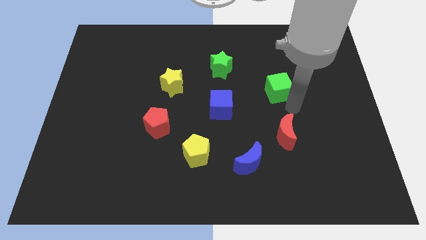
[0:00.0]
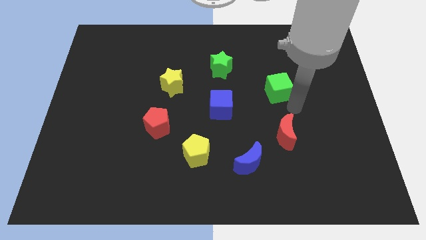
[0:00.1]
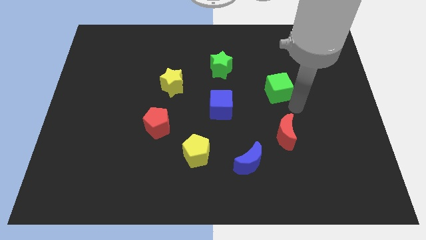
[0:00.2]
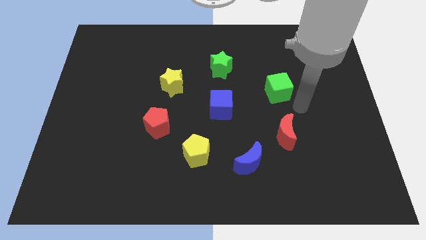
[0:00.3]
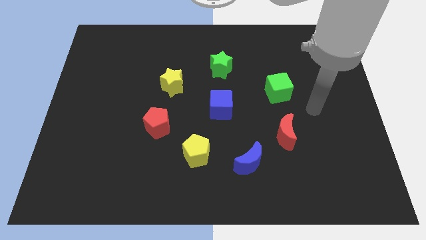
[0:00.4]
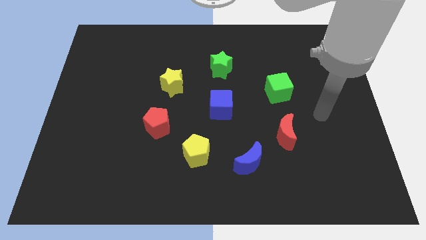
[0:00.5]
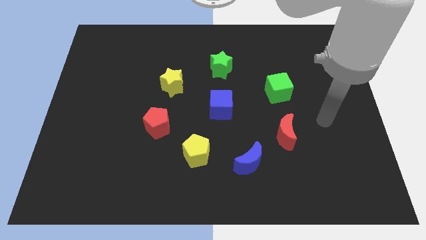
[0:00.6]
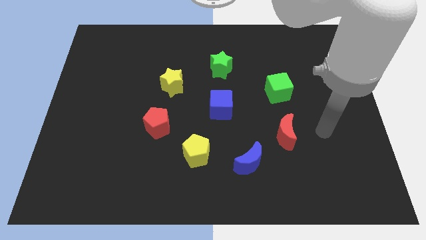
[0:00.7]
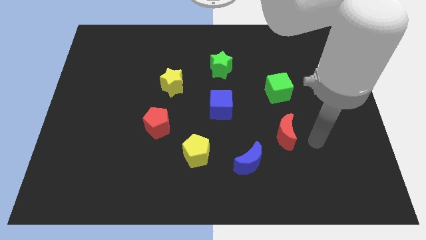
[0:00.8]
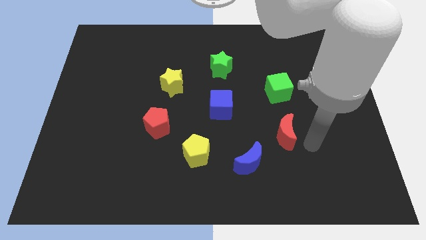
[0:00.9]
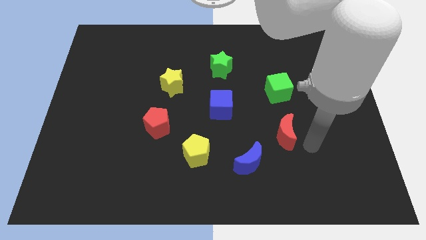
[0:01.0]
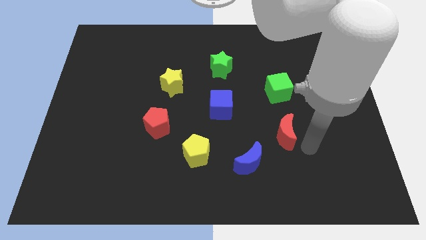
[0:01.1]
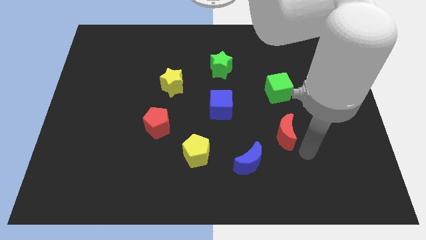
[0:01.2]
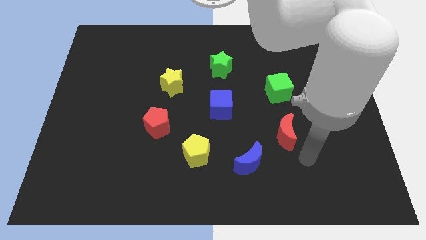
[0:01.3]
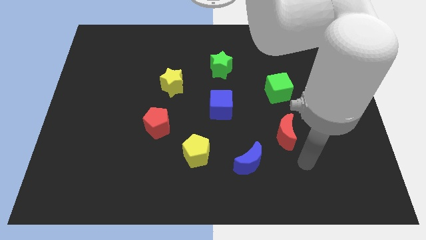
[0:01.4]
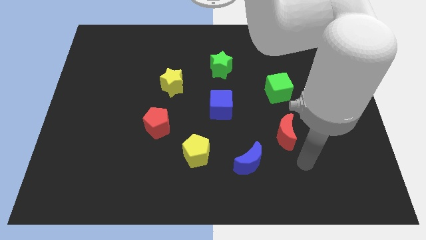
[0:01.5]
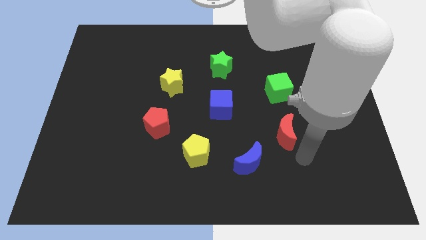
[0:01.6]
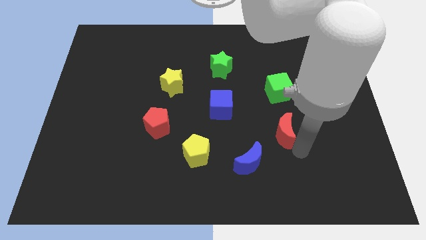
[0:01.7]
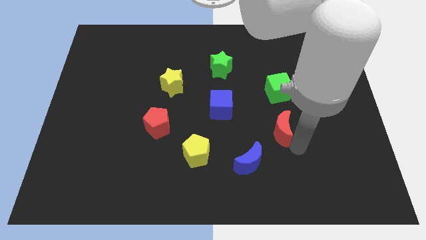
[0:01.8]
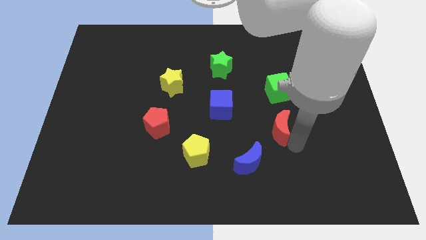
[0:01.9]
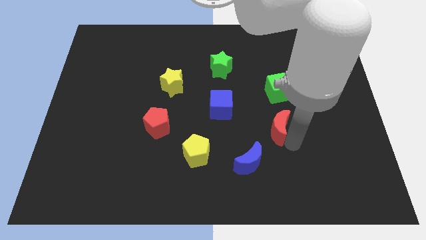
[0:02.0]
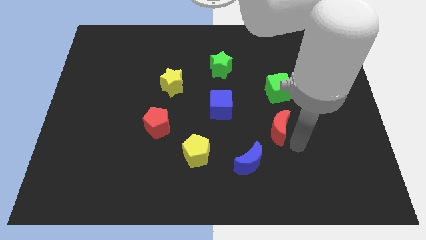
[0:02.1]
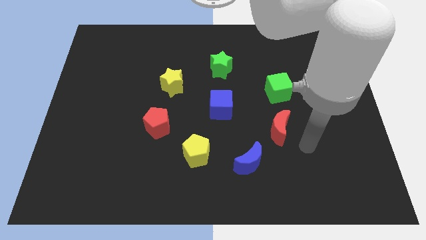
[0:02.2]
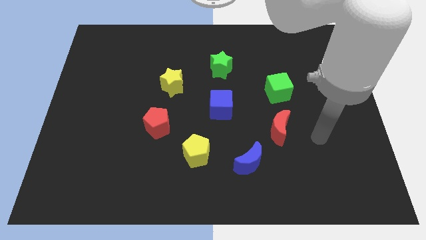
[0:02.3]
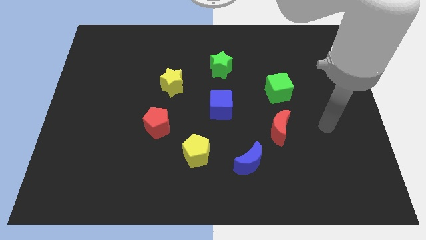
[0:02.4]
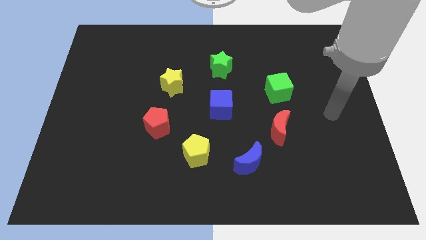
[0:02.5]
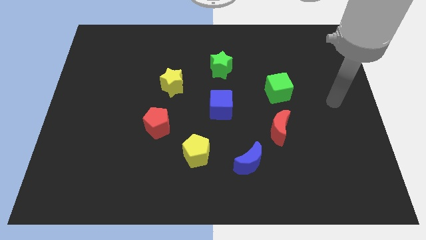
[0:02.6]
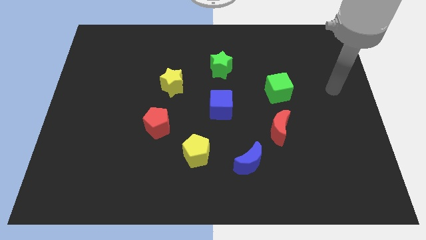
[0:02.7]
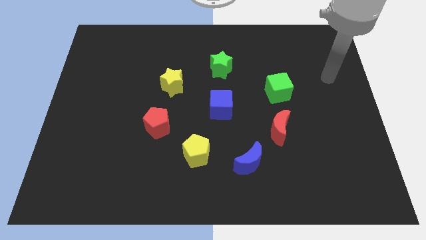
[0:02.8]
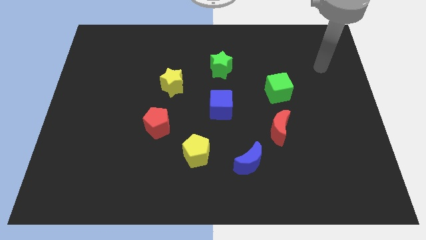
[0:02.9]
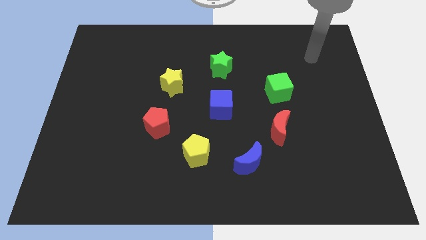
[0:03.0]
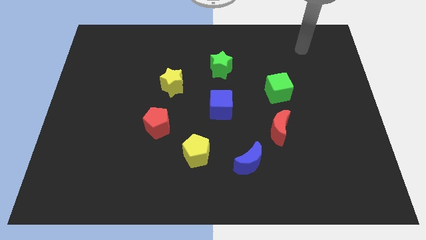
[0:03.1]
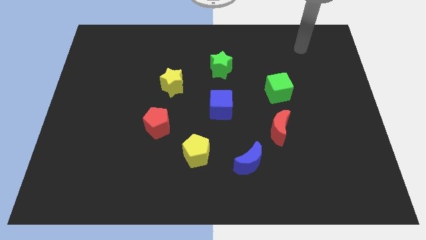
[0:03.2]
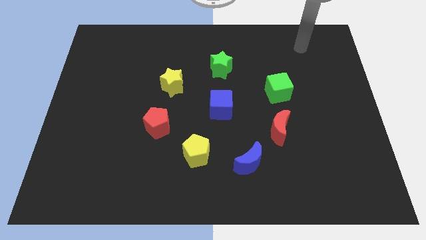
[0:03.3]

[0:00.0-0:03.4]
slightly move the red crescent to the left of the board

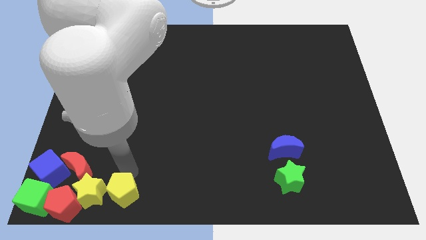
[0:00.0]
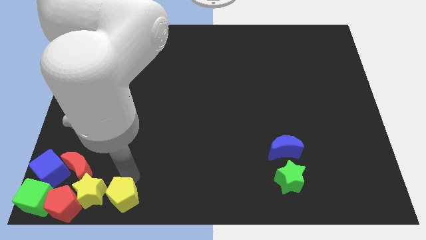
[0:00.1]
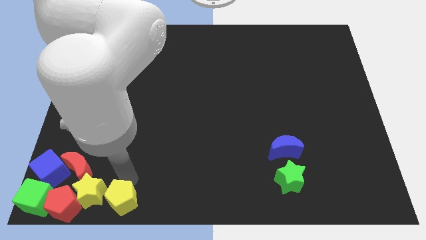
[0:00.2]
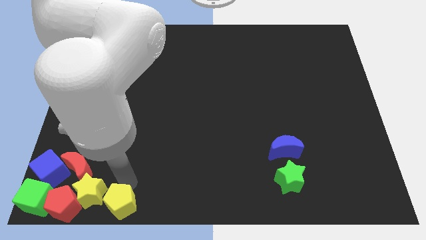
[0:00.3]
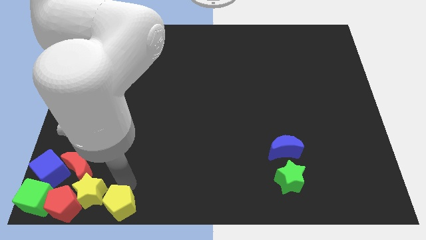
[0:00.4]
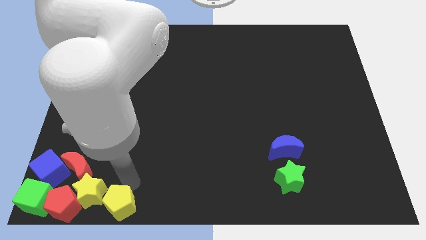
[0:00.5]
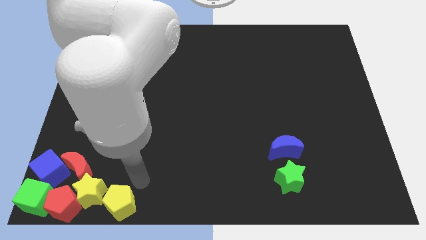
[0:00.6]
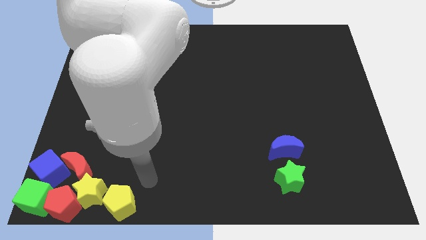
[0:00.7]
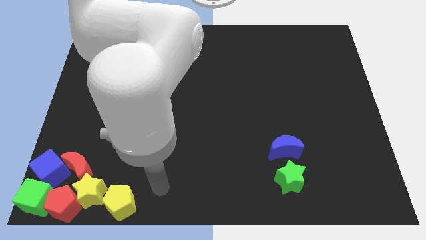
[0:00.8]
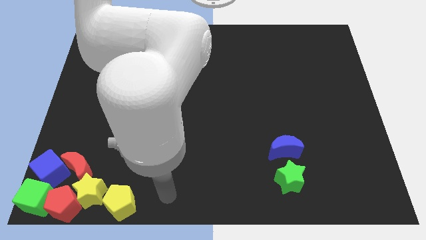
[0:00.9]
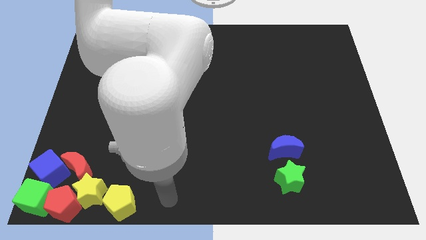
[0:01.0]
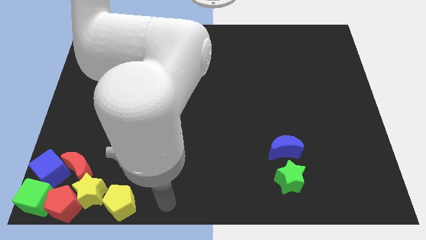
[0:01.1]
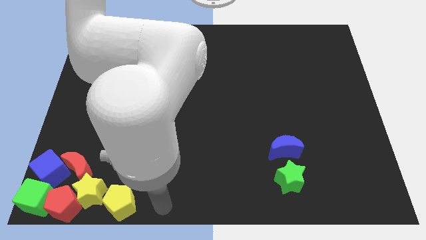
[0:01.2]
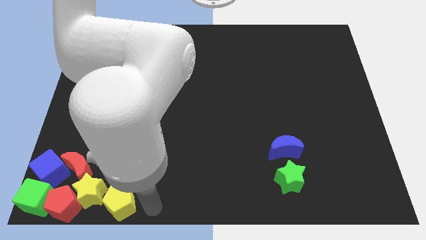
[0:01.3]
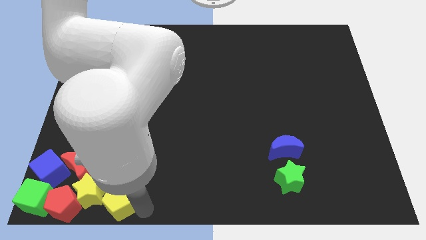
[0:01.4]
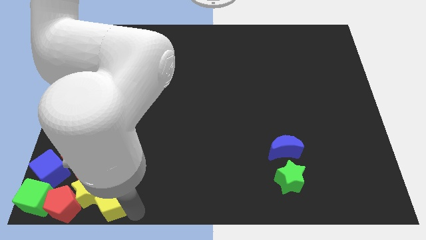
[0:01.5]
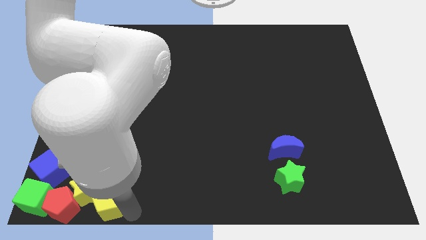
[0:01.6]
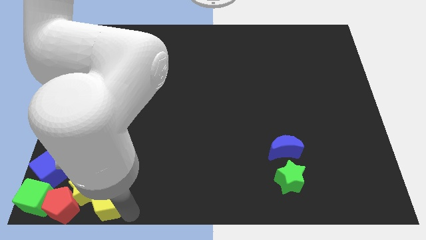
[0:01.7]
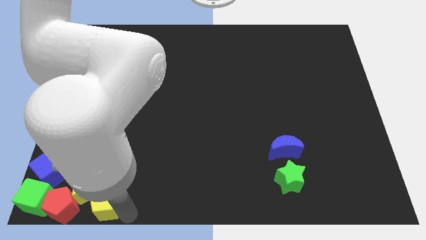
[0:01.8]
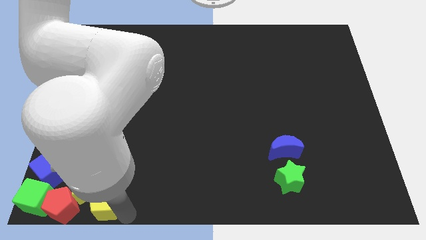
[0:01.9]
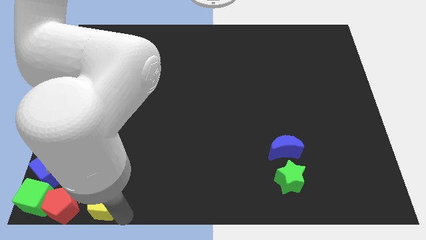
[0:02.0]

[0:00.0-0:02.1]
move the yellow pentagon into the yellow star

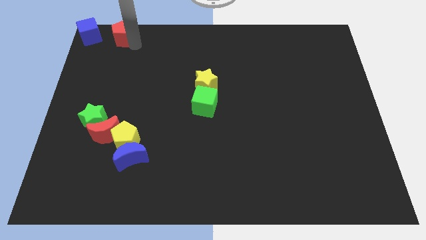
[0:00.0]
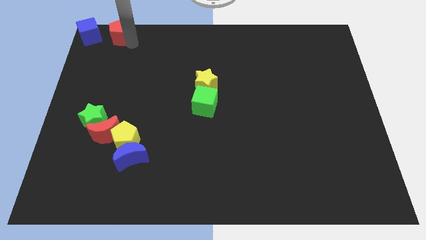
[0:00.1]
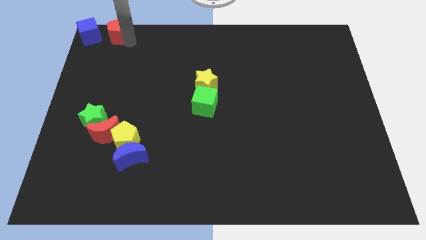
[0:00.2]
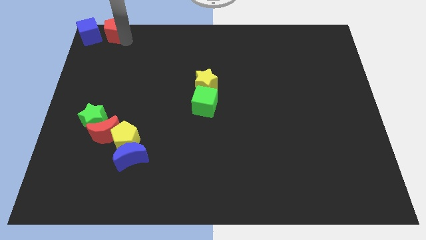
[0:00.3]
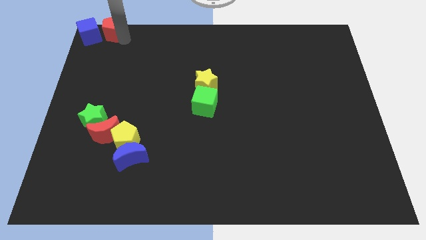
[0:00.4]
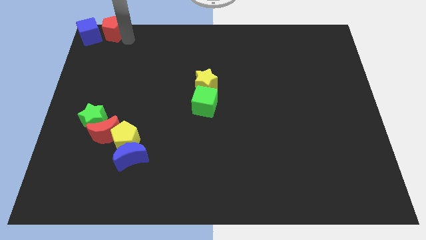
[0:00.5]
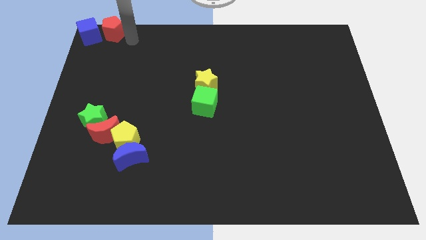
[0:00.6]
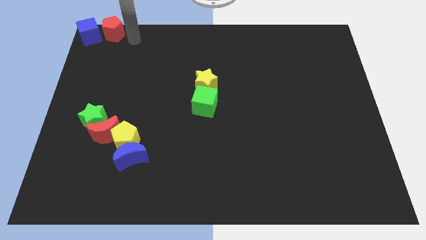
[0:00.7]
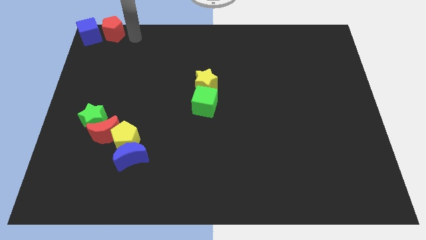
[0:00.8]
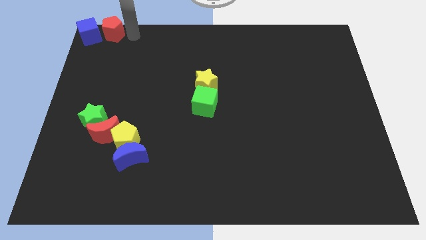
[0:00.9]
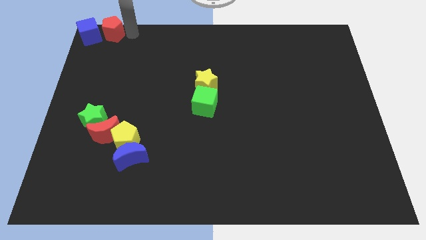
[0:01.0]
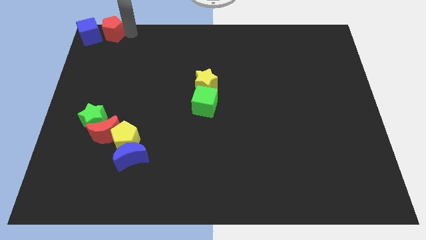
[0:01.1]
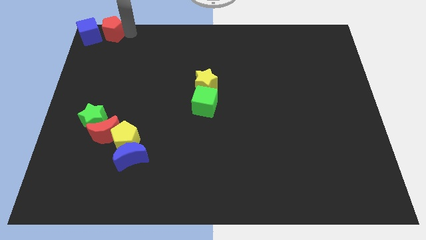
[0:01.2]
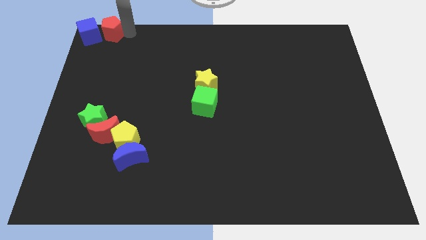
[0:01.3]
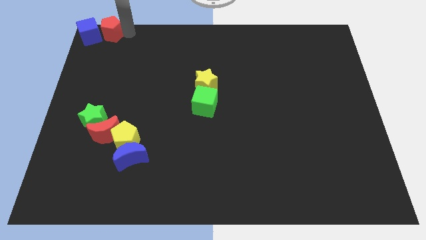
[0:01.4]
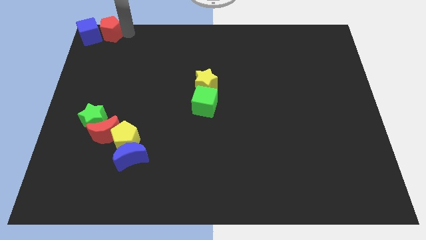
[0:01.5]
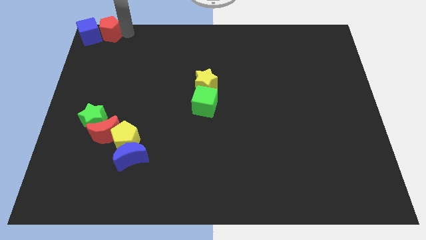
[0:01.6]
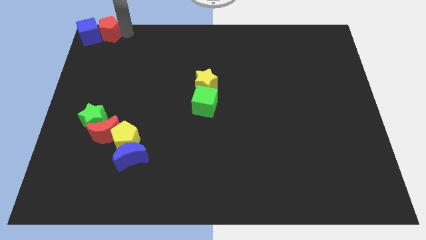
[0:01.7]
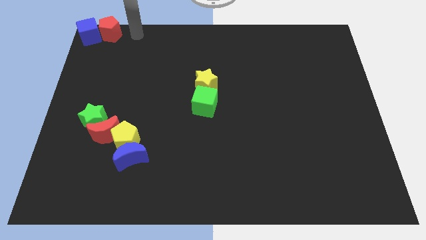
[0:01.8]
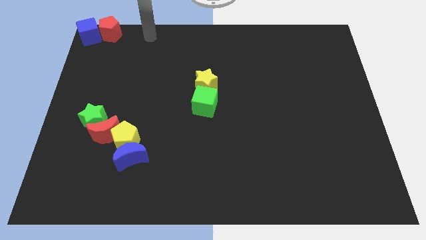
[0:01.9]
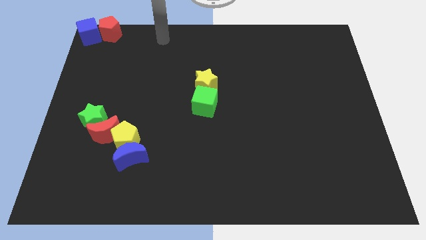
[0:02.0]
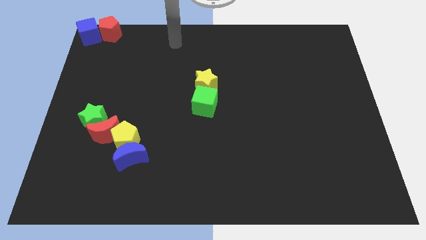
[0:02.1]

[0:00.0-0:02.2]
push the red pentagon into the blue cube

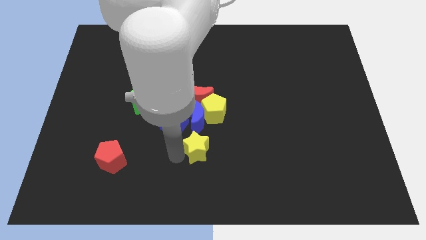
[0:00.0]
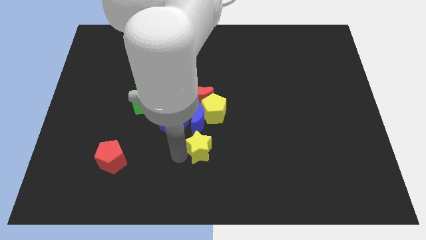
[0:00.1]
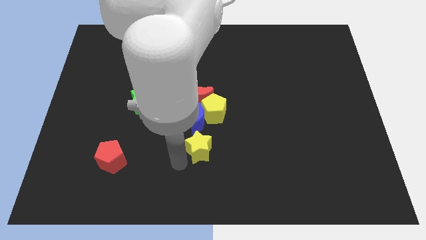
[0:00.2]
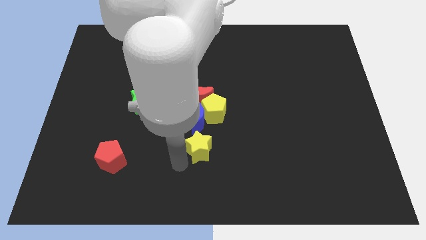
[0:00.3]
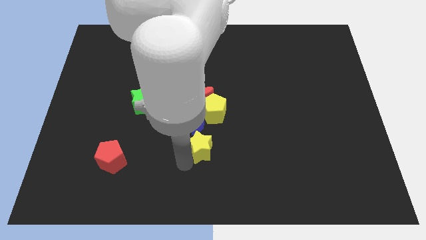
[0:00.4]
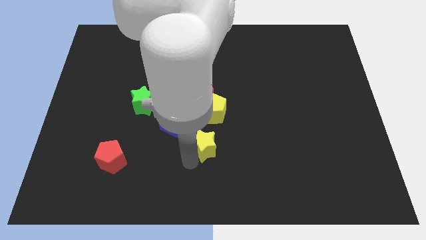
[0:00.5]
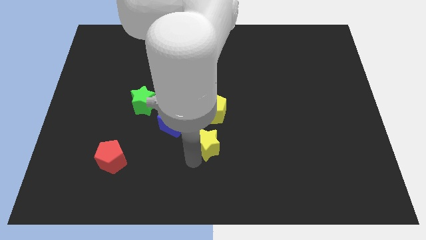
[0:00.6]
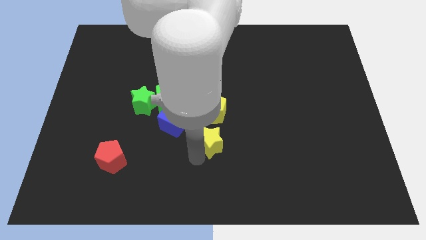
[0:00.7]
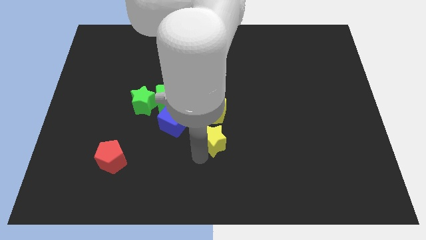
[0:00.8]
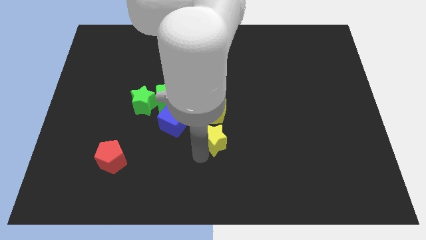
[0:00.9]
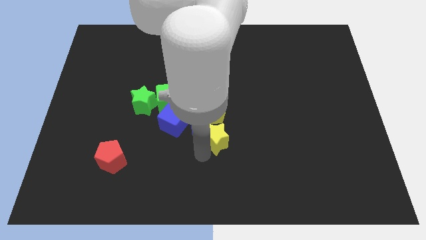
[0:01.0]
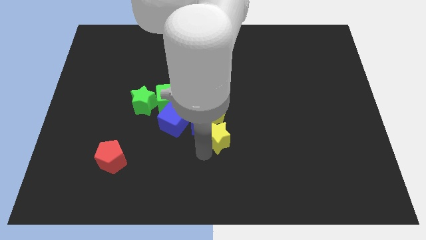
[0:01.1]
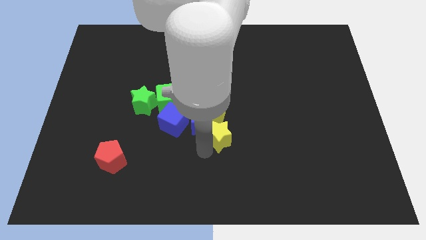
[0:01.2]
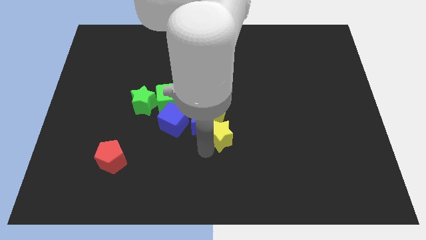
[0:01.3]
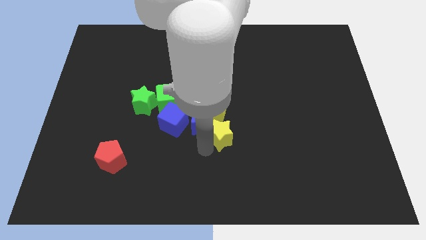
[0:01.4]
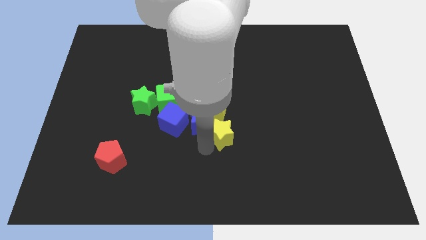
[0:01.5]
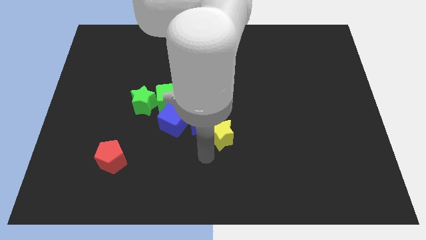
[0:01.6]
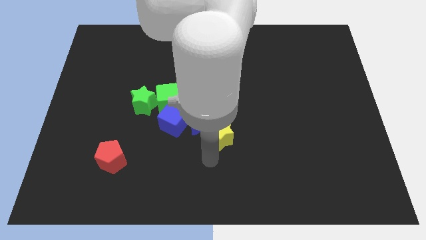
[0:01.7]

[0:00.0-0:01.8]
move the yellow star to the bottom side of the yellow pentagon
